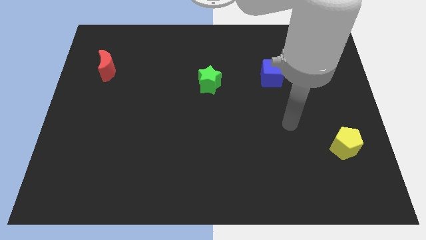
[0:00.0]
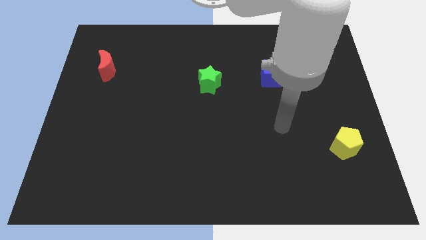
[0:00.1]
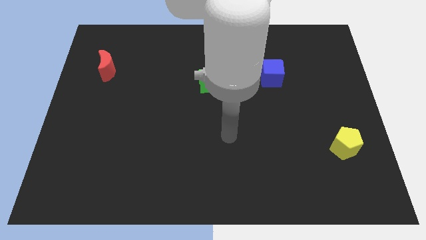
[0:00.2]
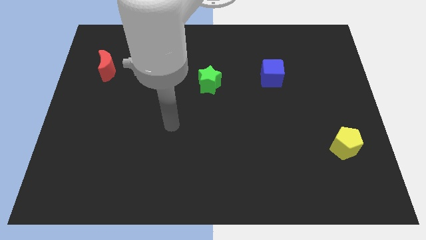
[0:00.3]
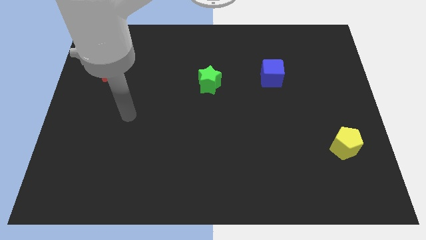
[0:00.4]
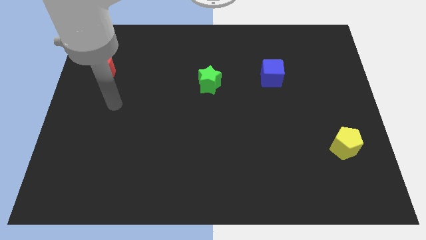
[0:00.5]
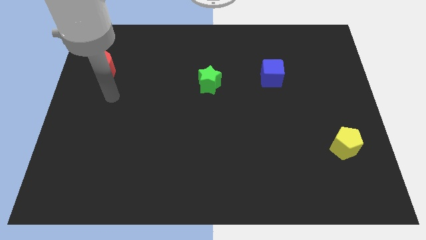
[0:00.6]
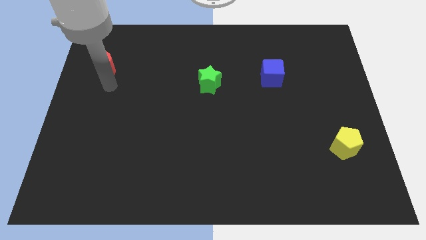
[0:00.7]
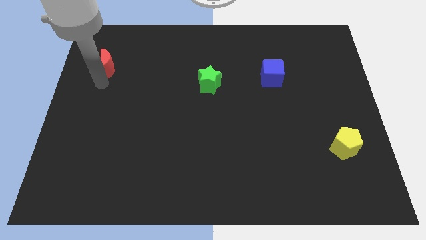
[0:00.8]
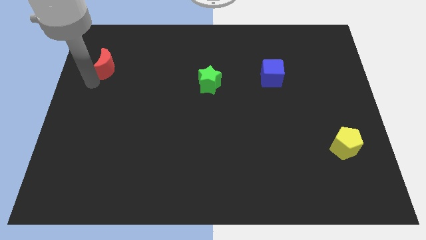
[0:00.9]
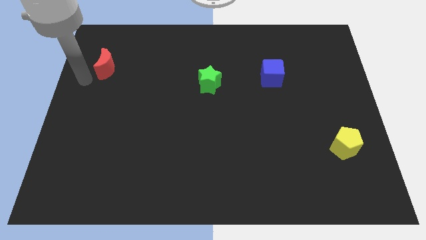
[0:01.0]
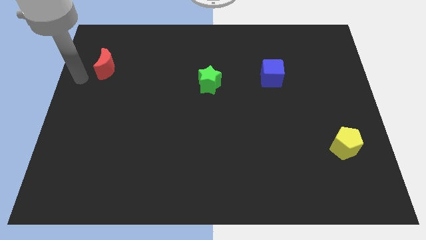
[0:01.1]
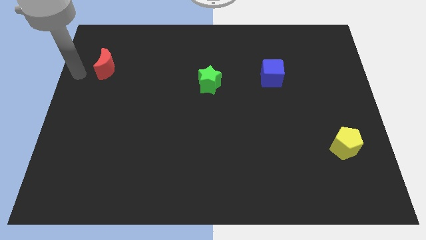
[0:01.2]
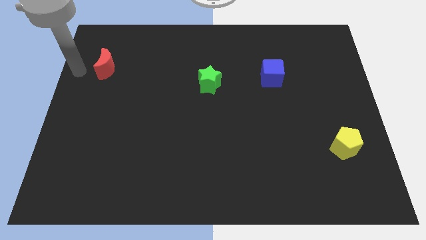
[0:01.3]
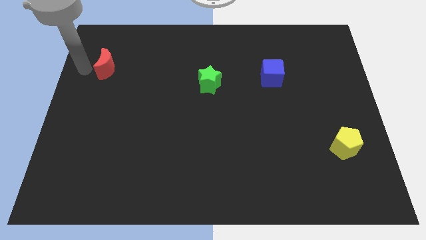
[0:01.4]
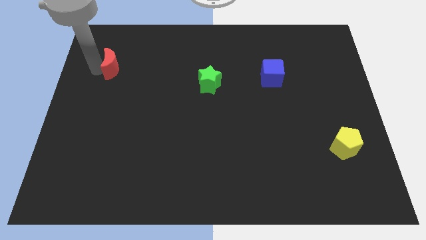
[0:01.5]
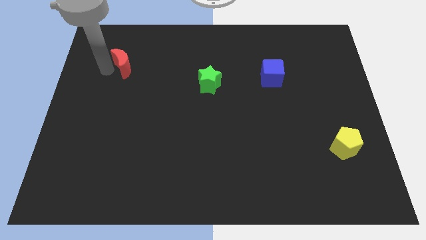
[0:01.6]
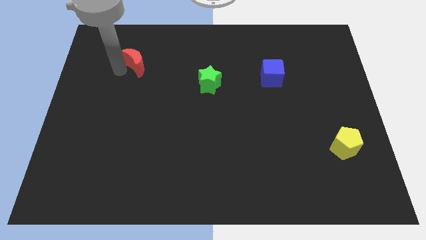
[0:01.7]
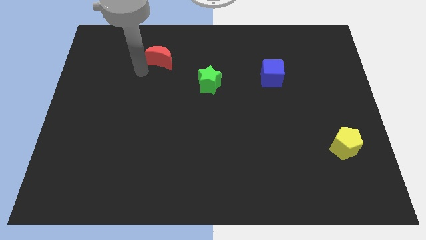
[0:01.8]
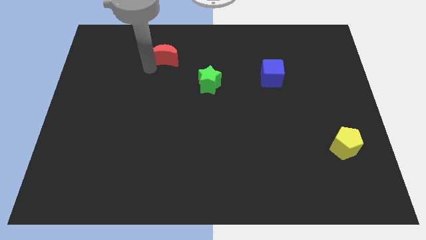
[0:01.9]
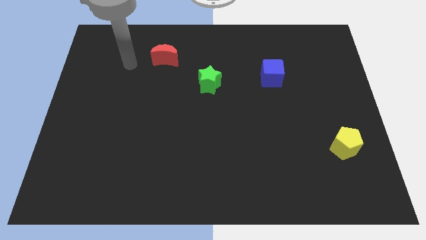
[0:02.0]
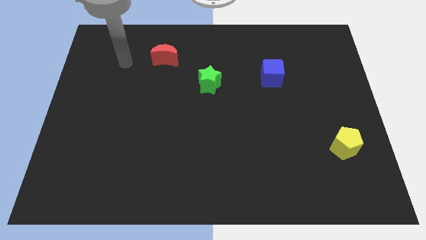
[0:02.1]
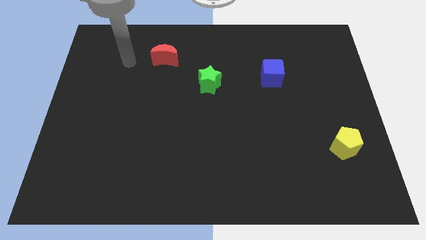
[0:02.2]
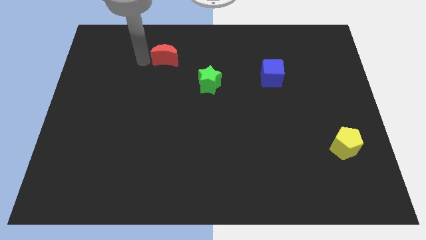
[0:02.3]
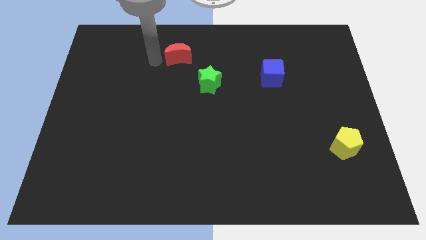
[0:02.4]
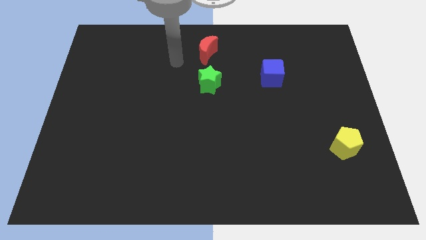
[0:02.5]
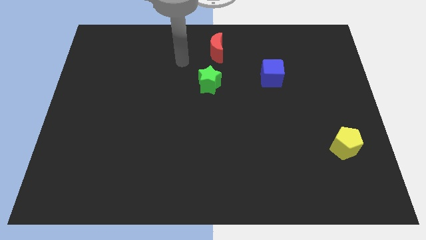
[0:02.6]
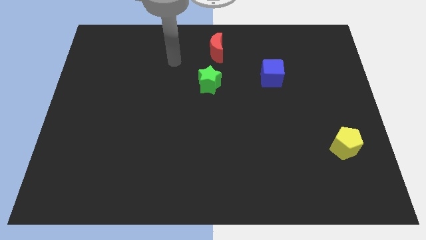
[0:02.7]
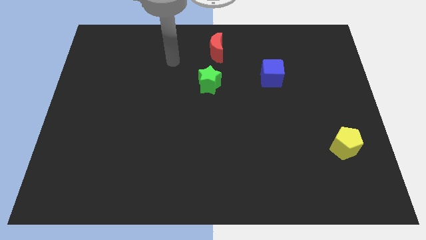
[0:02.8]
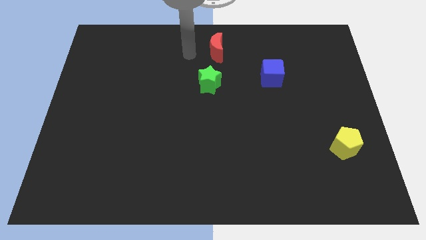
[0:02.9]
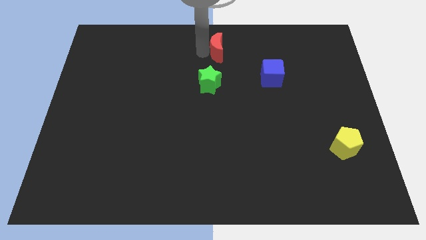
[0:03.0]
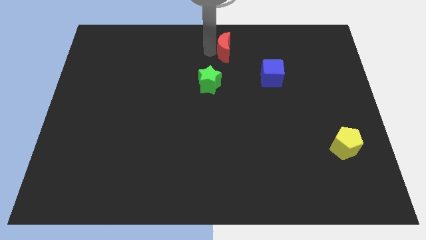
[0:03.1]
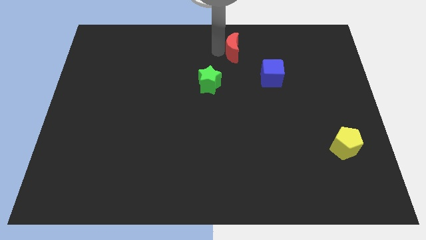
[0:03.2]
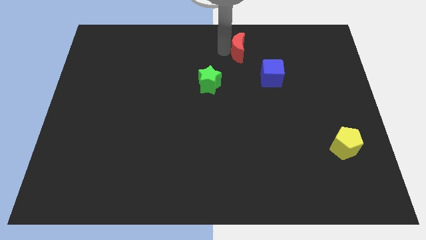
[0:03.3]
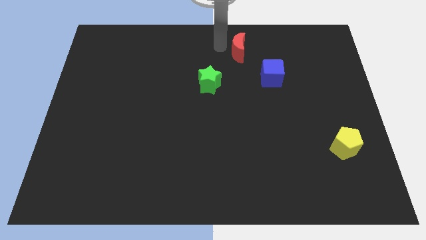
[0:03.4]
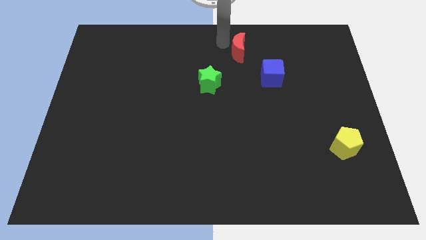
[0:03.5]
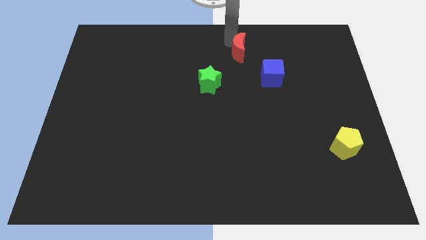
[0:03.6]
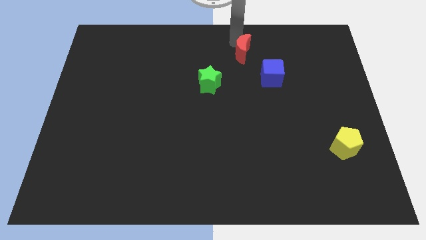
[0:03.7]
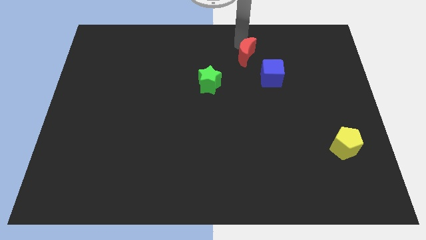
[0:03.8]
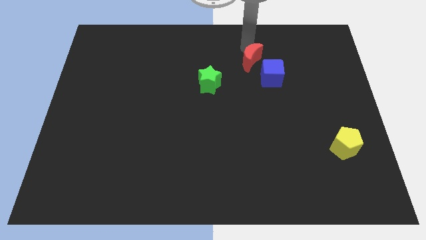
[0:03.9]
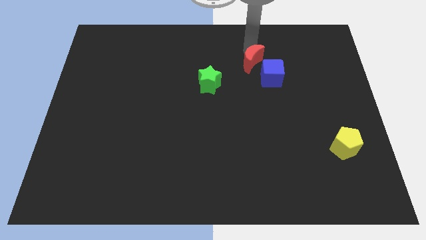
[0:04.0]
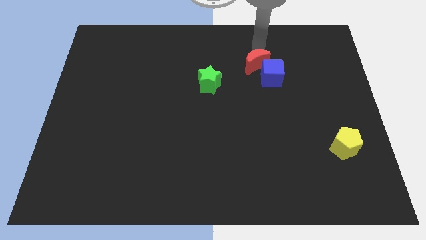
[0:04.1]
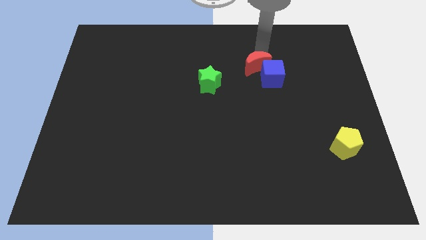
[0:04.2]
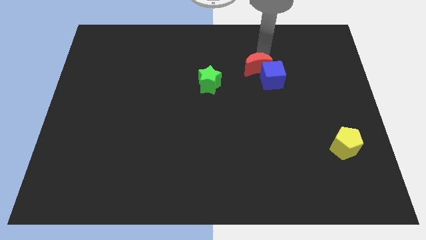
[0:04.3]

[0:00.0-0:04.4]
slide the moon next to the blue cube

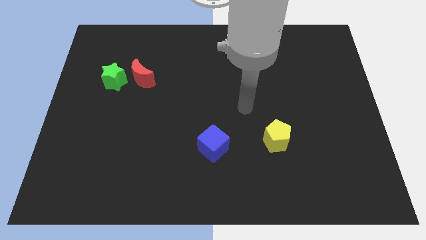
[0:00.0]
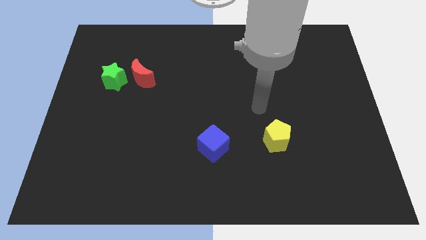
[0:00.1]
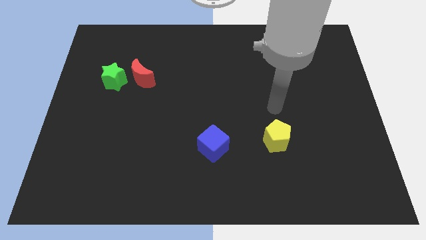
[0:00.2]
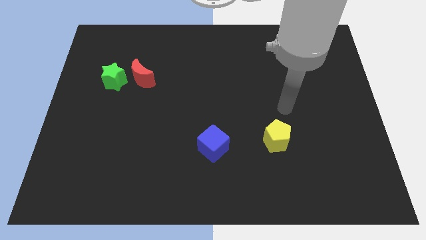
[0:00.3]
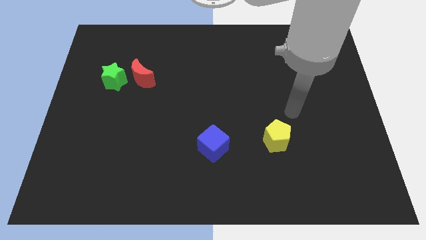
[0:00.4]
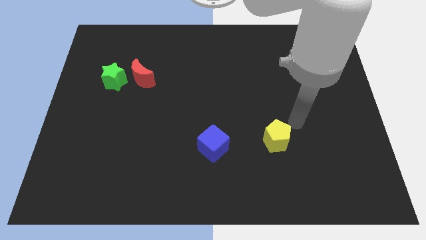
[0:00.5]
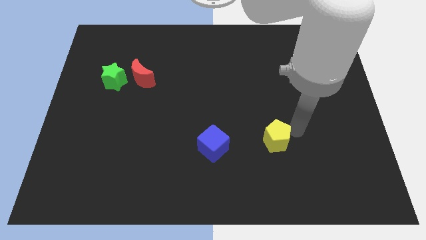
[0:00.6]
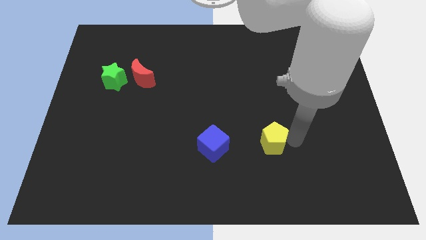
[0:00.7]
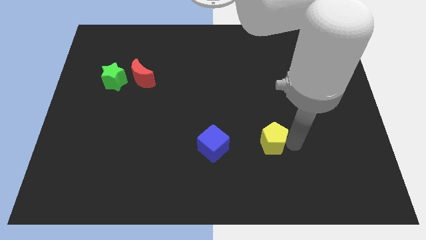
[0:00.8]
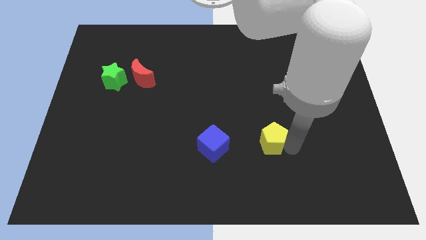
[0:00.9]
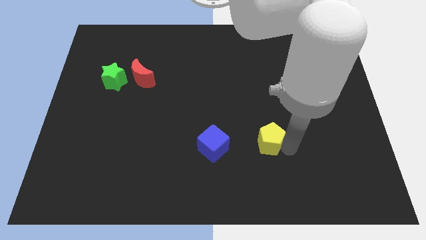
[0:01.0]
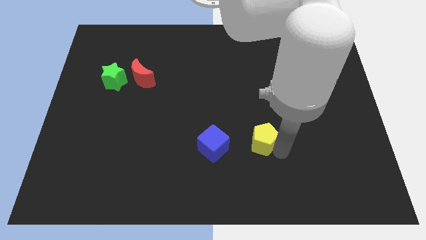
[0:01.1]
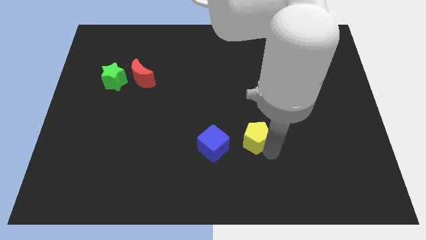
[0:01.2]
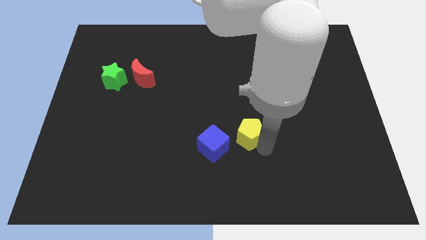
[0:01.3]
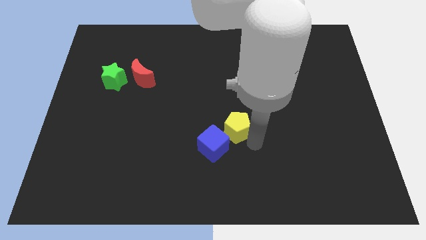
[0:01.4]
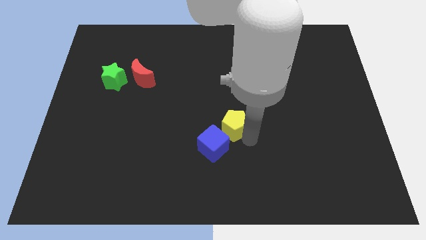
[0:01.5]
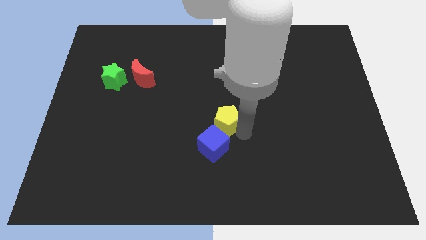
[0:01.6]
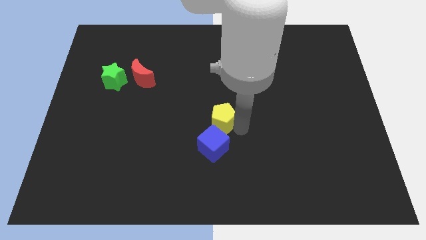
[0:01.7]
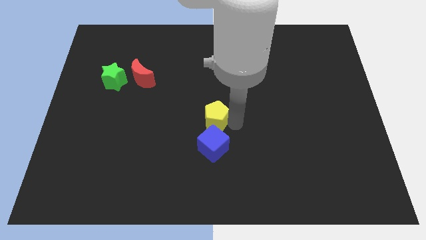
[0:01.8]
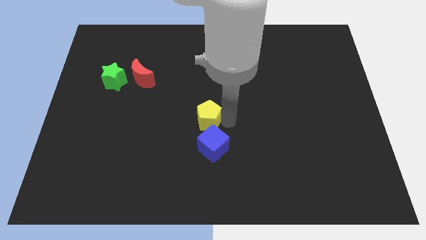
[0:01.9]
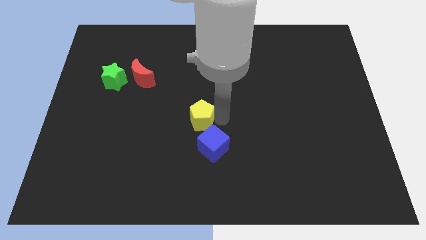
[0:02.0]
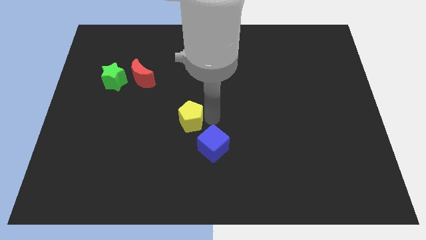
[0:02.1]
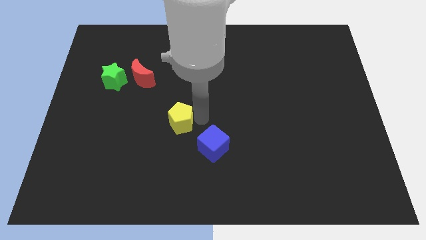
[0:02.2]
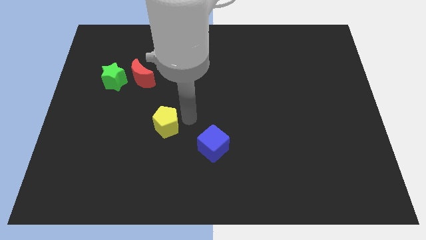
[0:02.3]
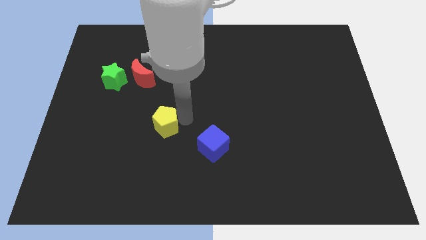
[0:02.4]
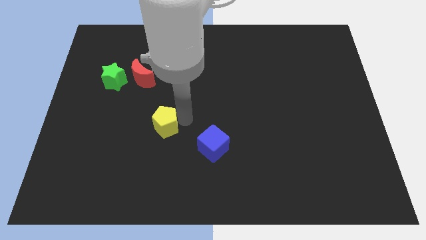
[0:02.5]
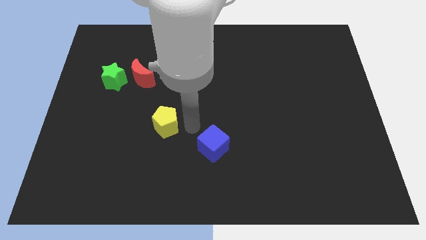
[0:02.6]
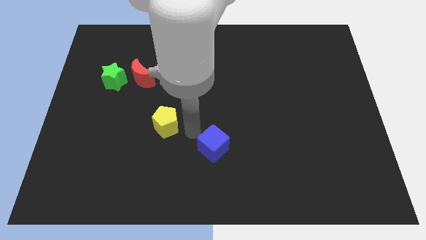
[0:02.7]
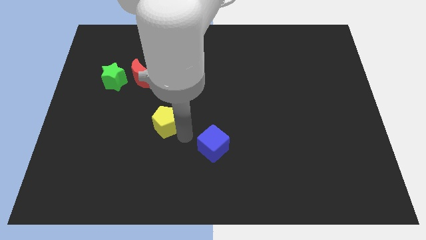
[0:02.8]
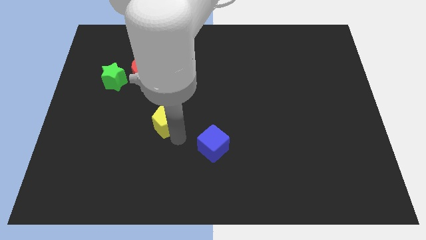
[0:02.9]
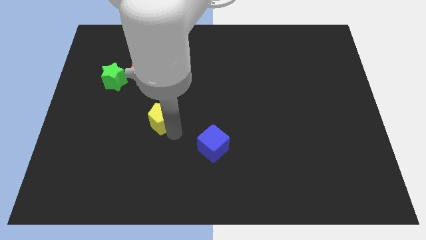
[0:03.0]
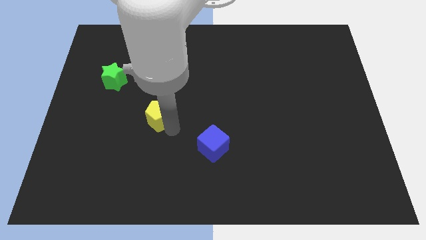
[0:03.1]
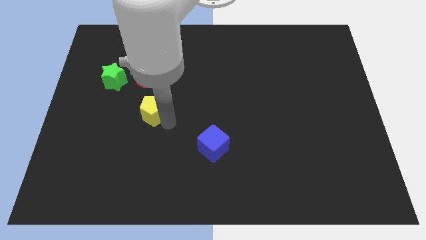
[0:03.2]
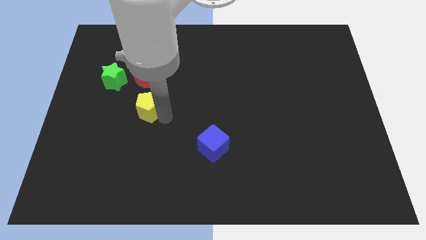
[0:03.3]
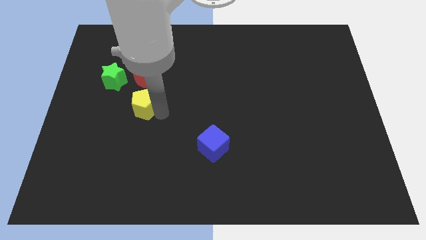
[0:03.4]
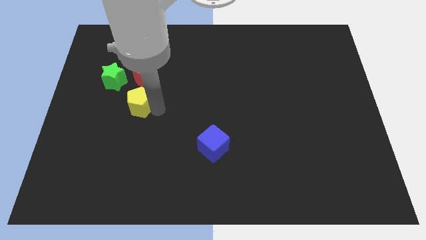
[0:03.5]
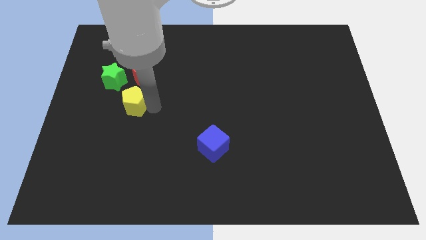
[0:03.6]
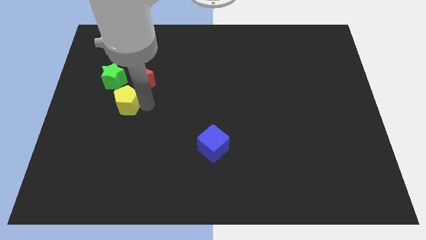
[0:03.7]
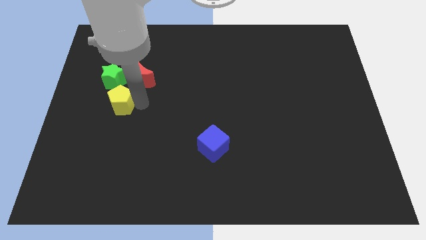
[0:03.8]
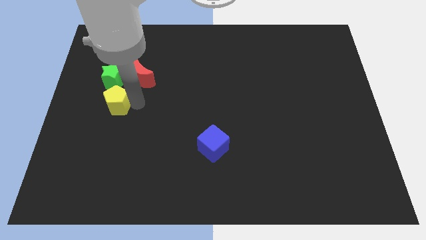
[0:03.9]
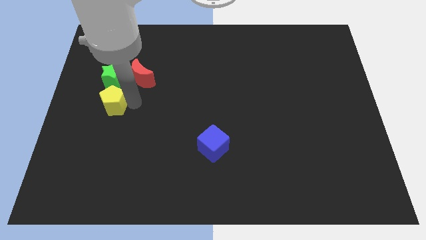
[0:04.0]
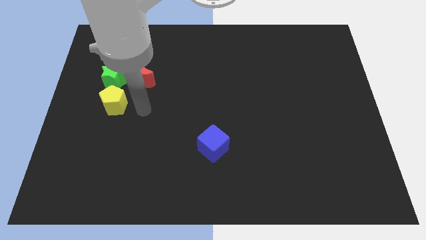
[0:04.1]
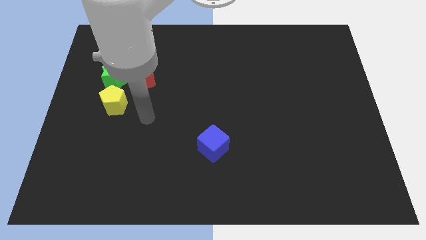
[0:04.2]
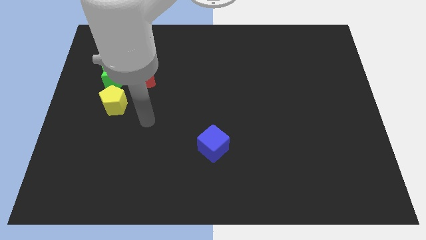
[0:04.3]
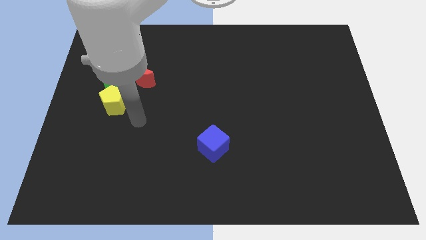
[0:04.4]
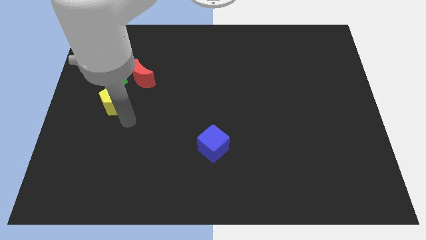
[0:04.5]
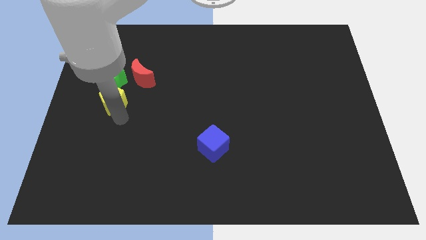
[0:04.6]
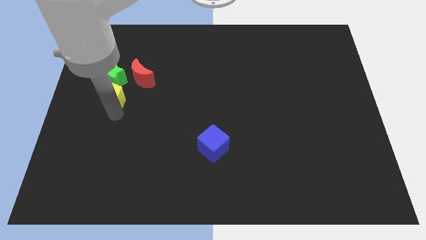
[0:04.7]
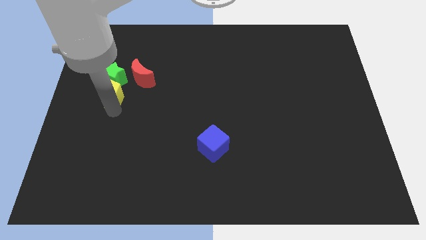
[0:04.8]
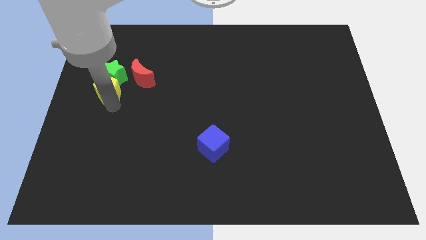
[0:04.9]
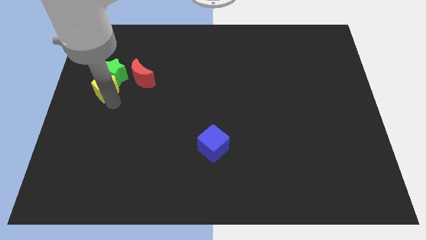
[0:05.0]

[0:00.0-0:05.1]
put the pentagon next to the star
